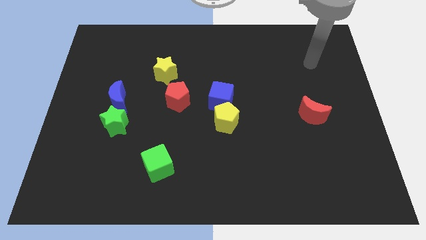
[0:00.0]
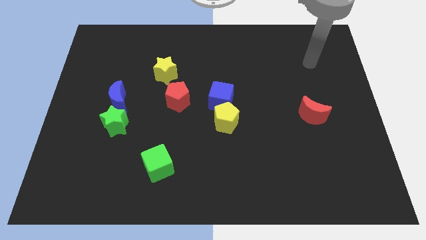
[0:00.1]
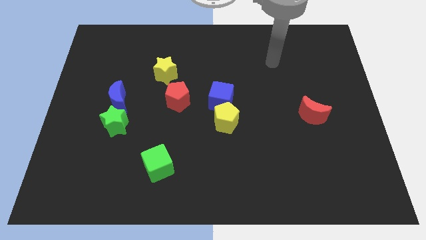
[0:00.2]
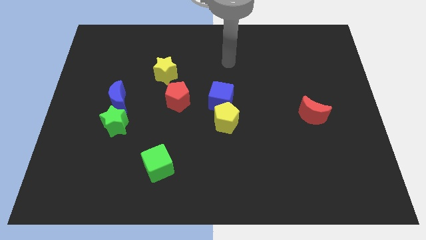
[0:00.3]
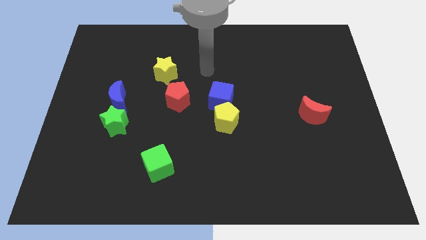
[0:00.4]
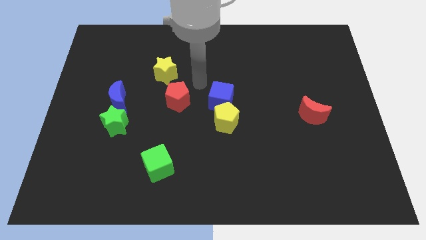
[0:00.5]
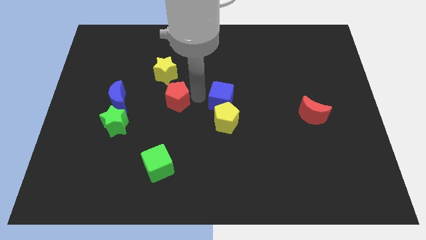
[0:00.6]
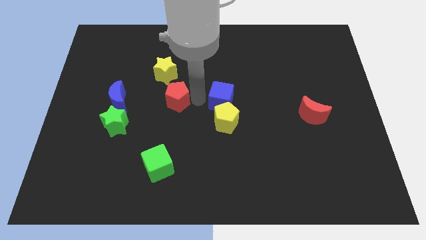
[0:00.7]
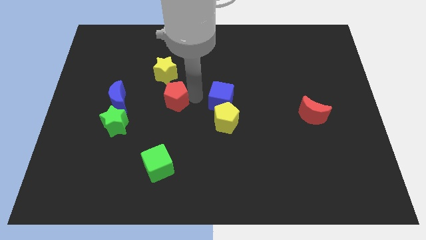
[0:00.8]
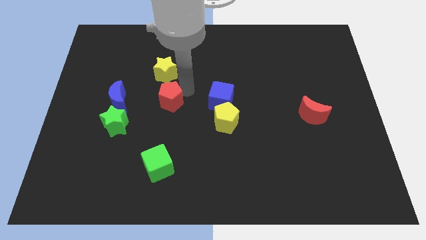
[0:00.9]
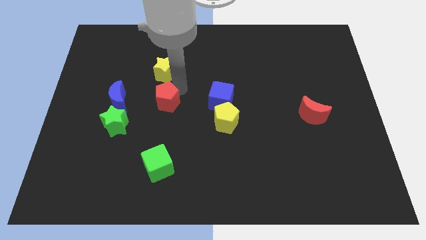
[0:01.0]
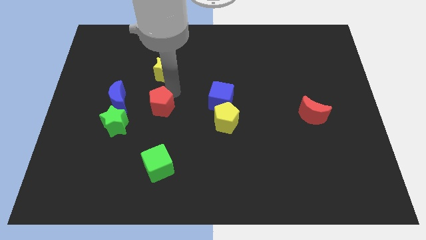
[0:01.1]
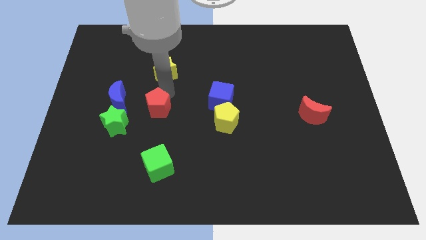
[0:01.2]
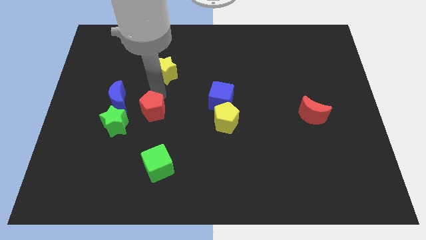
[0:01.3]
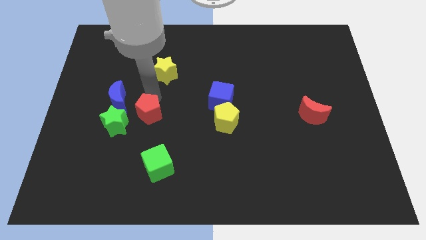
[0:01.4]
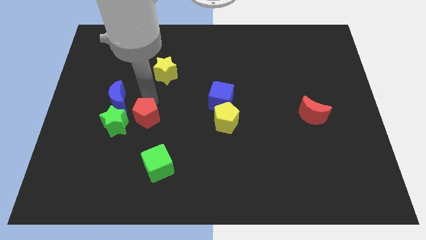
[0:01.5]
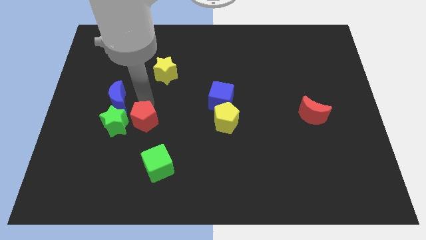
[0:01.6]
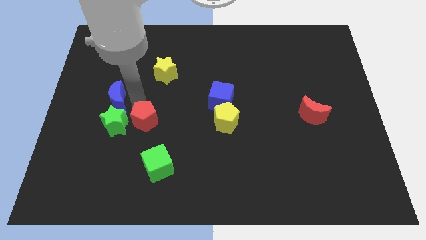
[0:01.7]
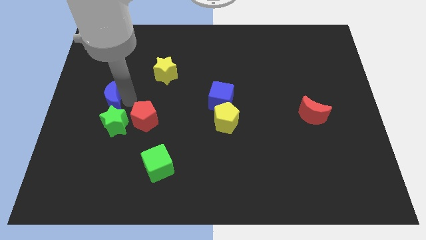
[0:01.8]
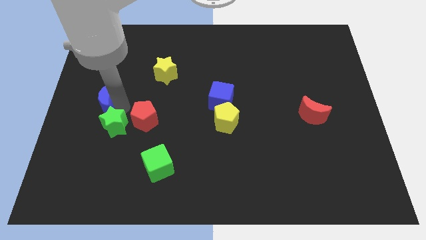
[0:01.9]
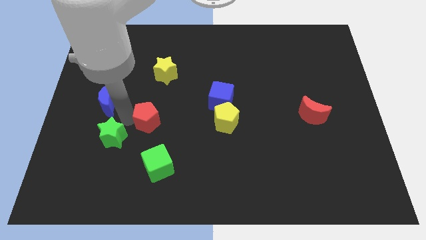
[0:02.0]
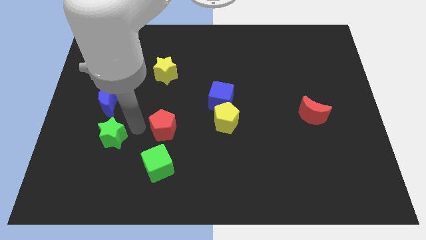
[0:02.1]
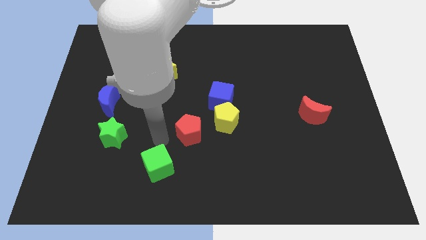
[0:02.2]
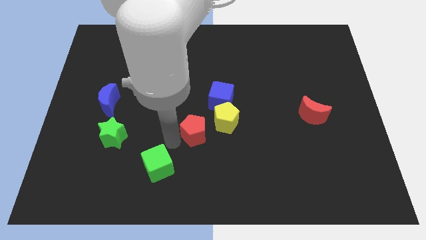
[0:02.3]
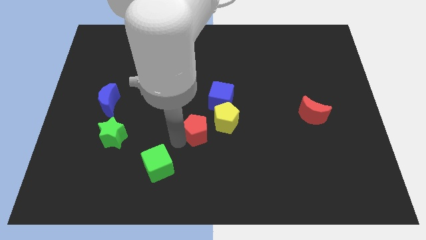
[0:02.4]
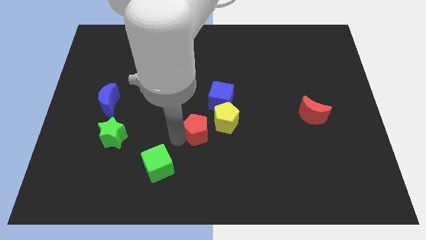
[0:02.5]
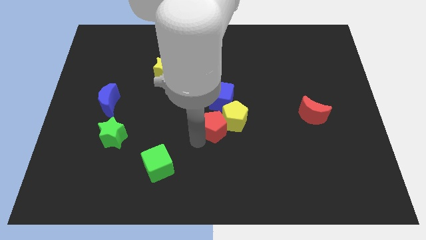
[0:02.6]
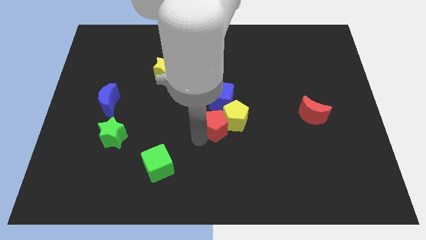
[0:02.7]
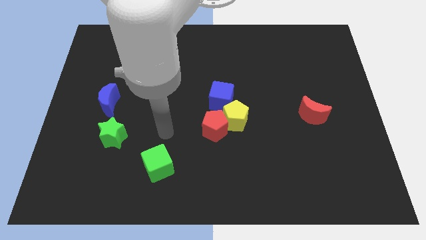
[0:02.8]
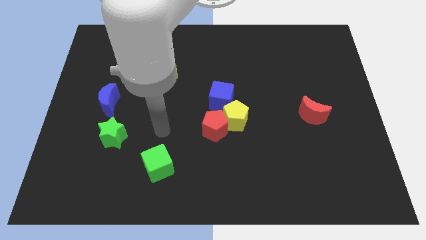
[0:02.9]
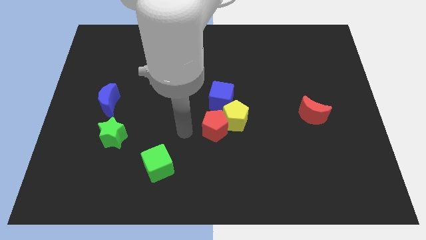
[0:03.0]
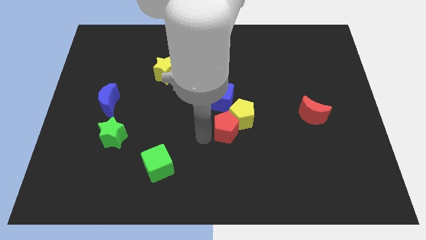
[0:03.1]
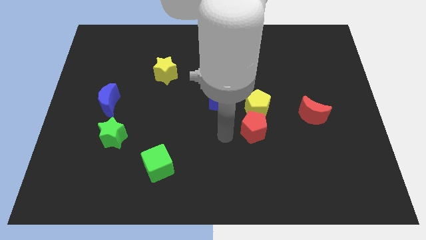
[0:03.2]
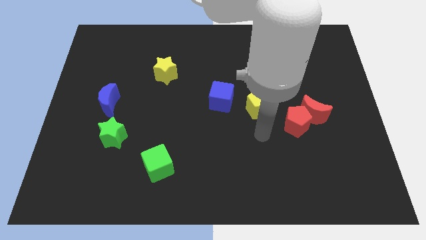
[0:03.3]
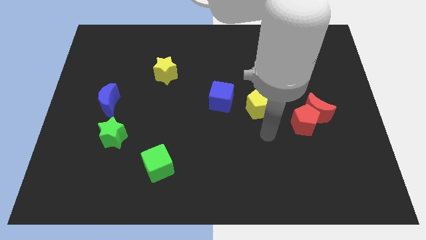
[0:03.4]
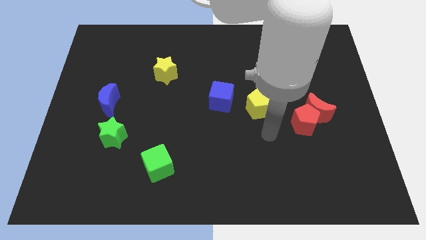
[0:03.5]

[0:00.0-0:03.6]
push the red pentagon towards the red moon

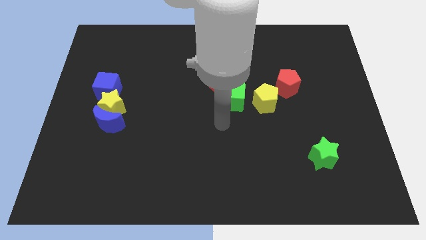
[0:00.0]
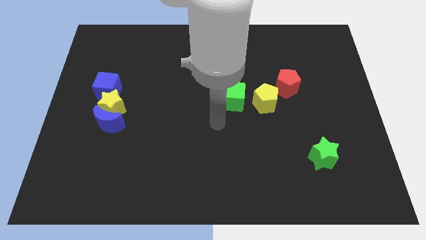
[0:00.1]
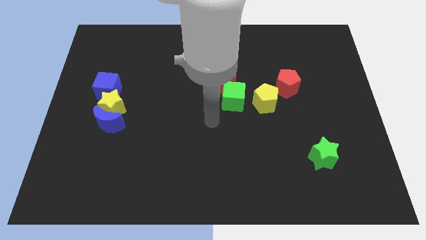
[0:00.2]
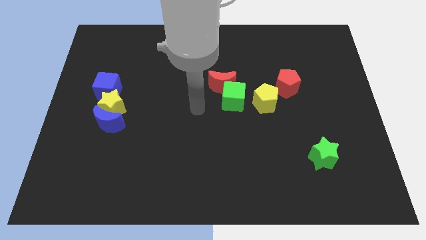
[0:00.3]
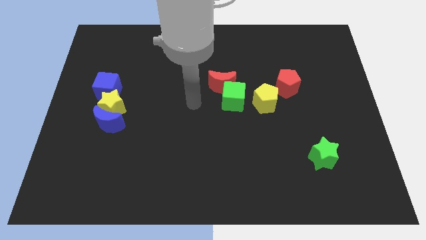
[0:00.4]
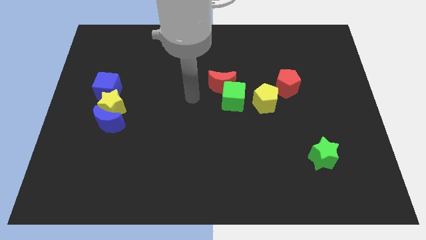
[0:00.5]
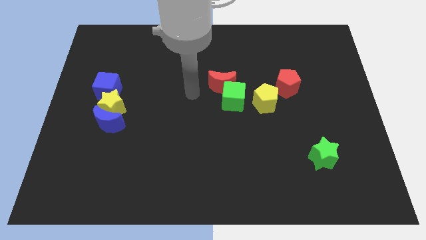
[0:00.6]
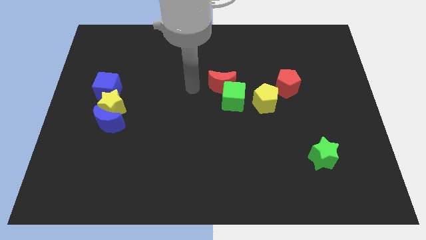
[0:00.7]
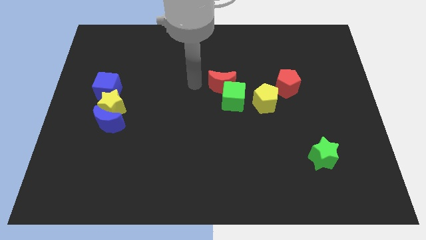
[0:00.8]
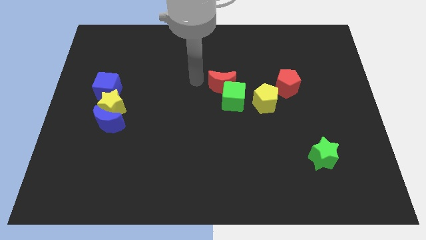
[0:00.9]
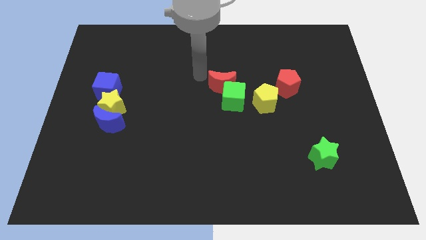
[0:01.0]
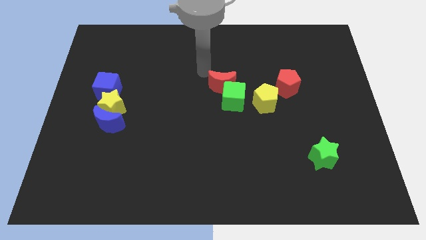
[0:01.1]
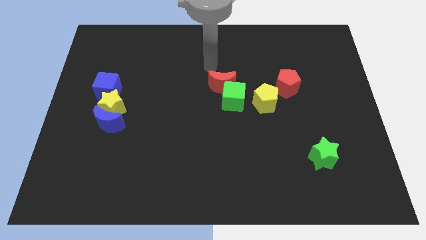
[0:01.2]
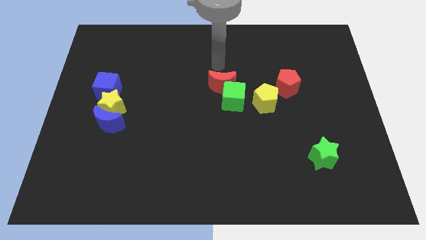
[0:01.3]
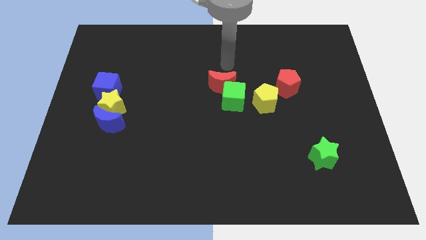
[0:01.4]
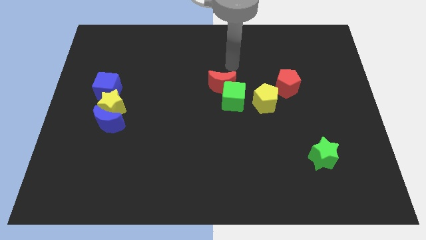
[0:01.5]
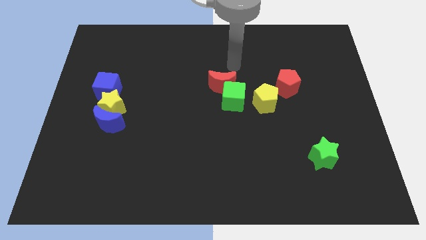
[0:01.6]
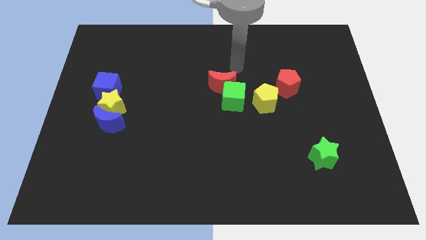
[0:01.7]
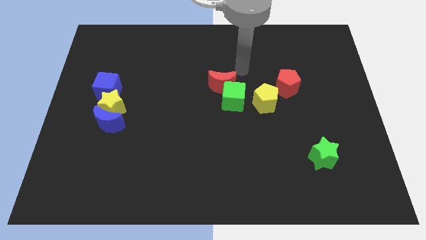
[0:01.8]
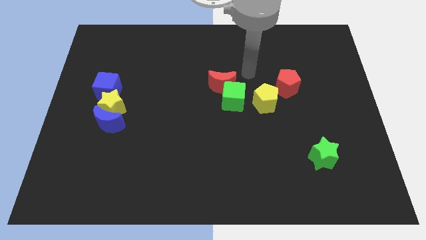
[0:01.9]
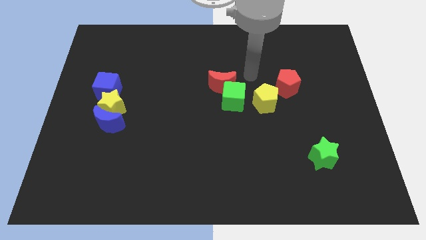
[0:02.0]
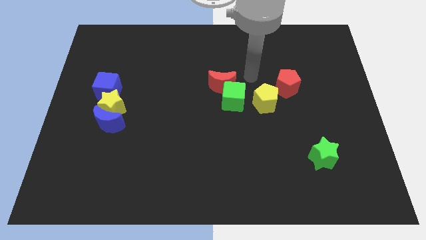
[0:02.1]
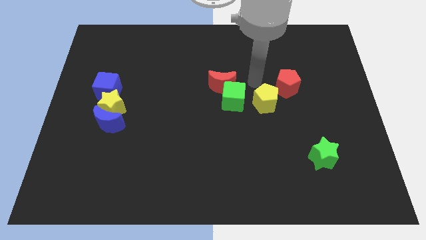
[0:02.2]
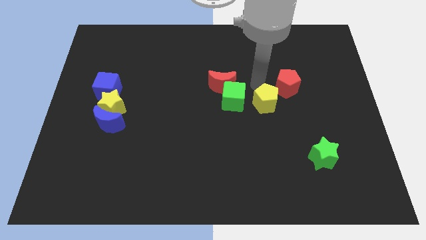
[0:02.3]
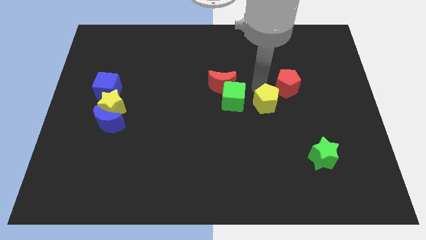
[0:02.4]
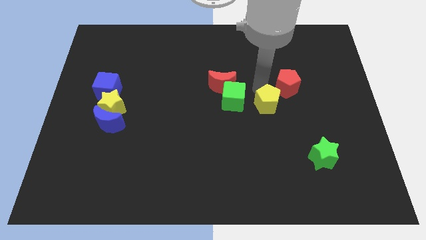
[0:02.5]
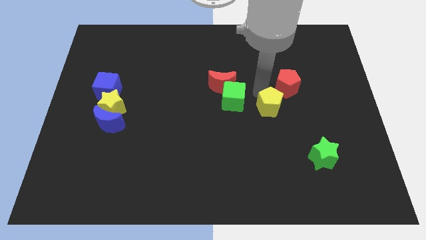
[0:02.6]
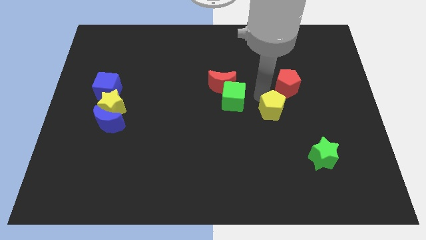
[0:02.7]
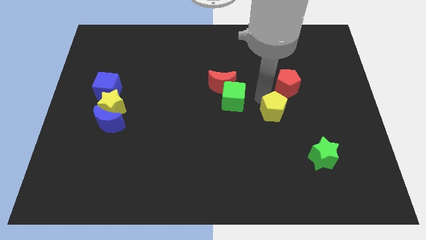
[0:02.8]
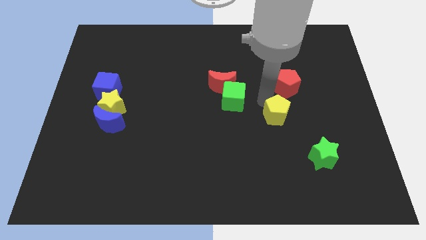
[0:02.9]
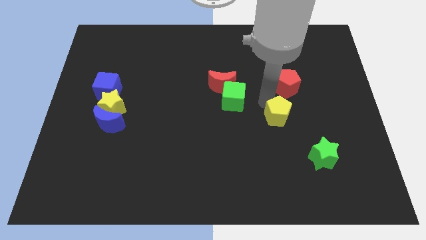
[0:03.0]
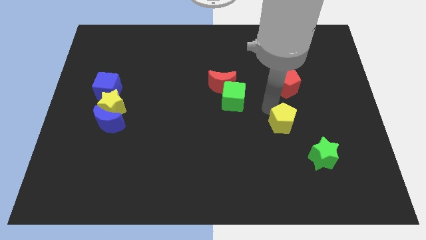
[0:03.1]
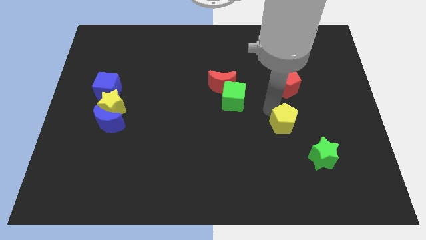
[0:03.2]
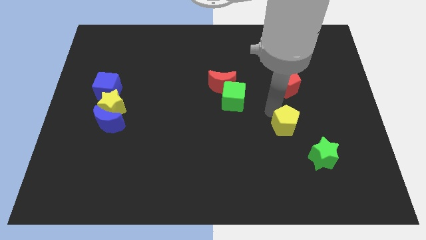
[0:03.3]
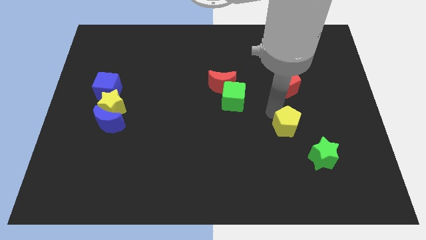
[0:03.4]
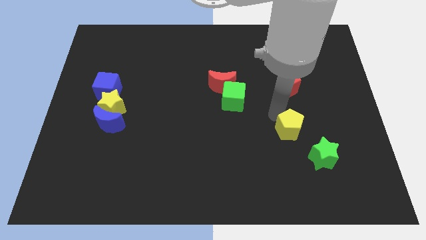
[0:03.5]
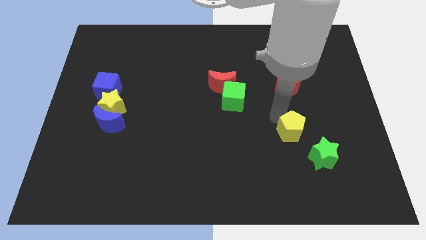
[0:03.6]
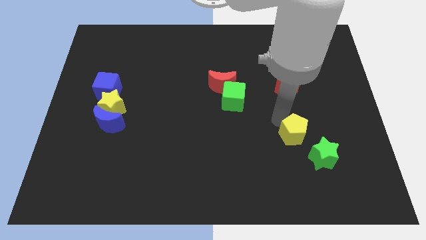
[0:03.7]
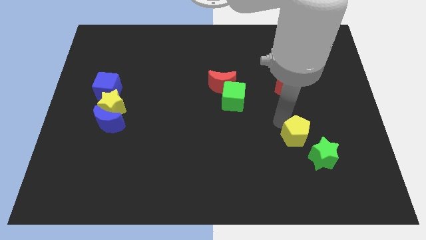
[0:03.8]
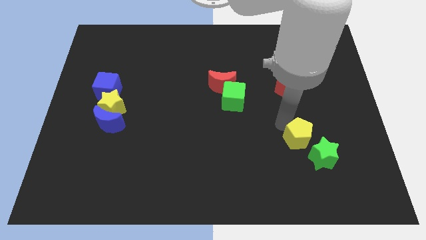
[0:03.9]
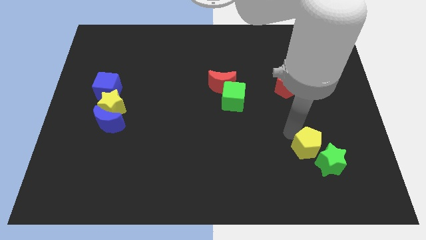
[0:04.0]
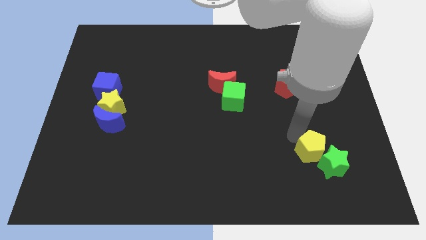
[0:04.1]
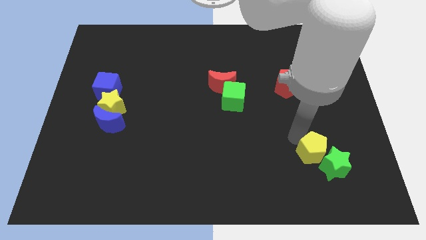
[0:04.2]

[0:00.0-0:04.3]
push the yellow pentagon close to the green star

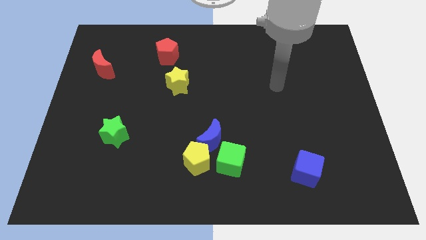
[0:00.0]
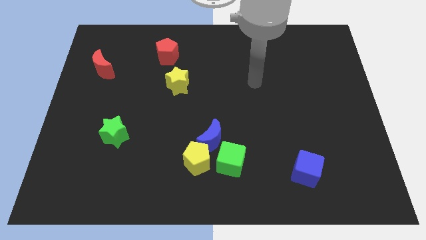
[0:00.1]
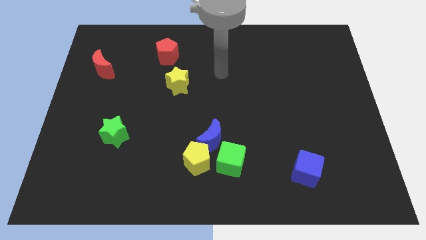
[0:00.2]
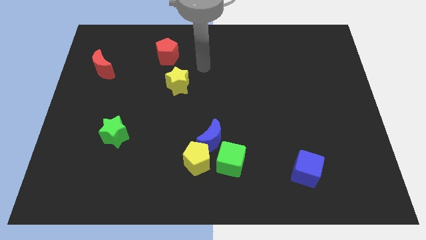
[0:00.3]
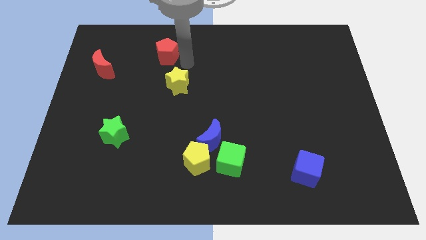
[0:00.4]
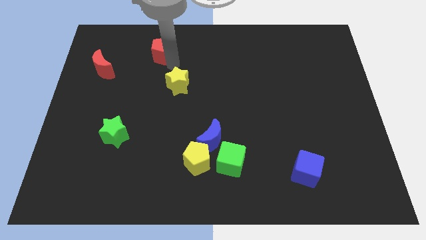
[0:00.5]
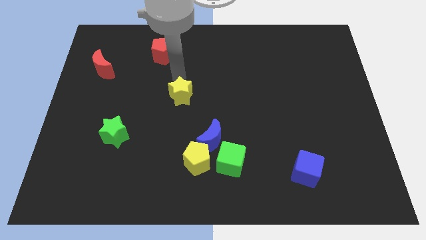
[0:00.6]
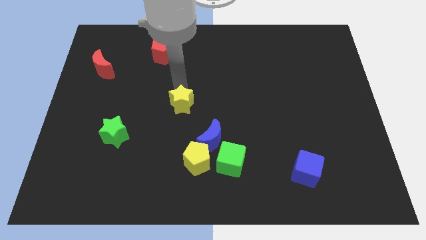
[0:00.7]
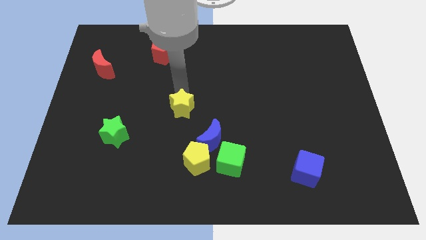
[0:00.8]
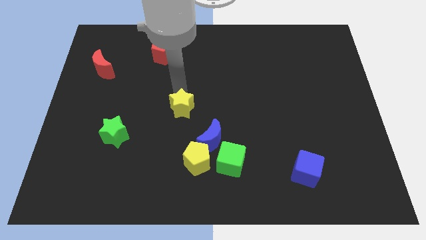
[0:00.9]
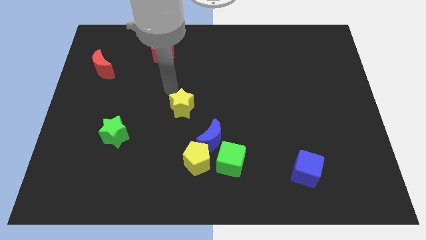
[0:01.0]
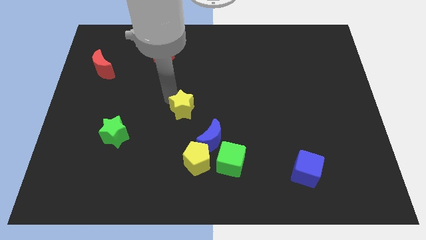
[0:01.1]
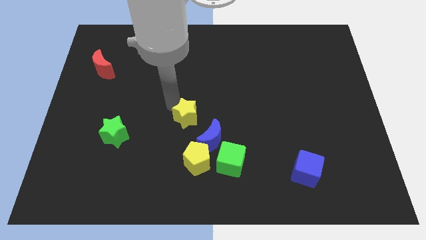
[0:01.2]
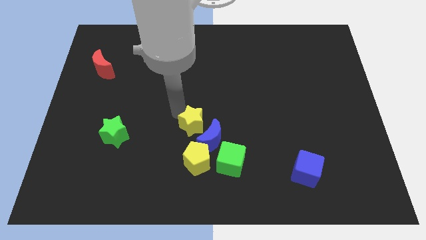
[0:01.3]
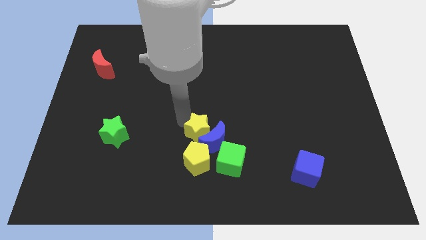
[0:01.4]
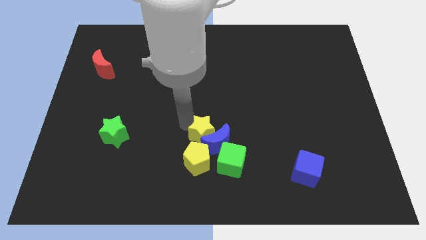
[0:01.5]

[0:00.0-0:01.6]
slide the yellow star close to the blue moon
